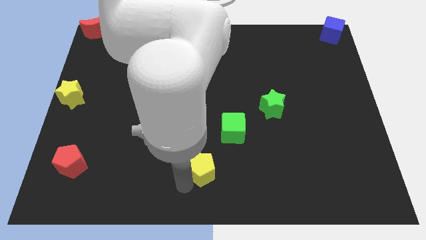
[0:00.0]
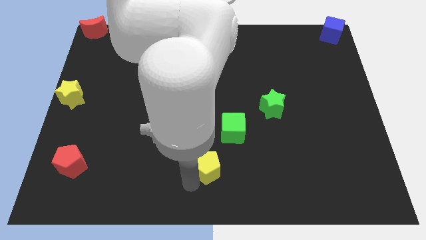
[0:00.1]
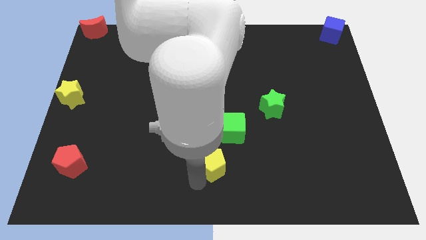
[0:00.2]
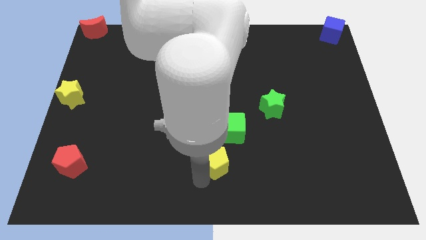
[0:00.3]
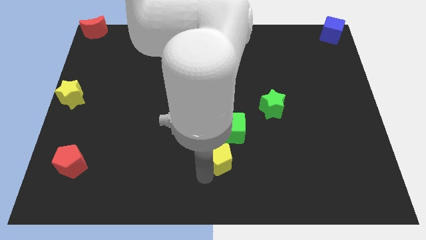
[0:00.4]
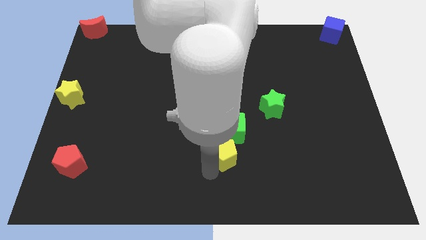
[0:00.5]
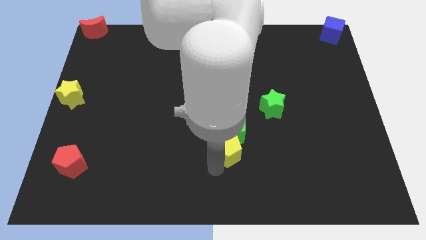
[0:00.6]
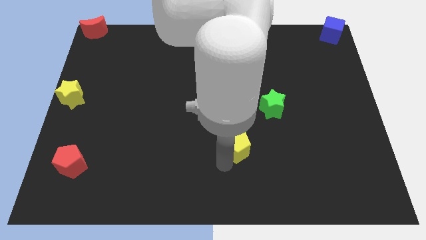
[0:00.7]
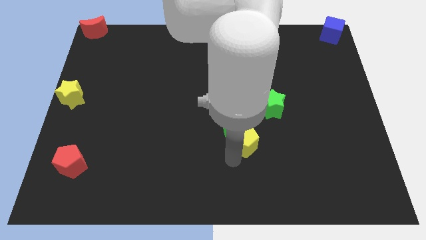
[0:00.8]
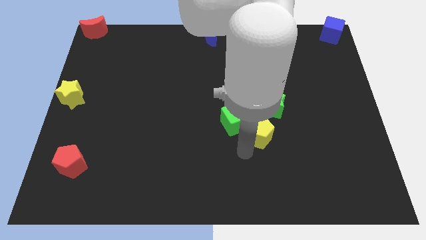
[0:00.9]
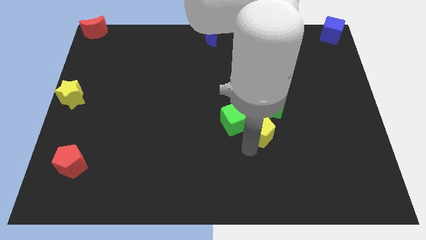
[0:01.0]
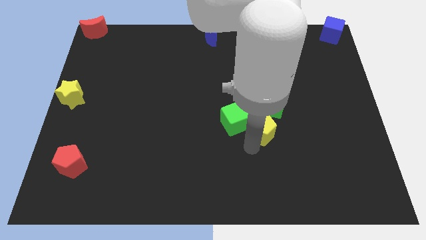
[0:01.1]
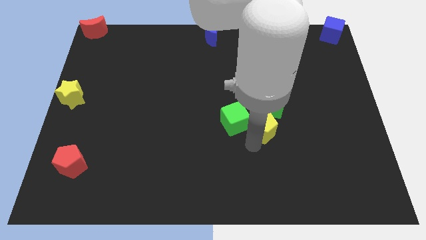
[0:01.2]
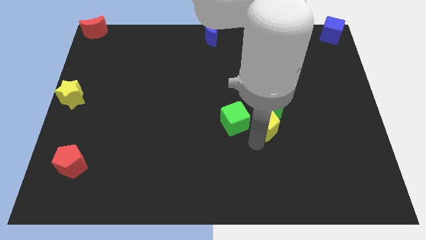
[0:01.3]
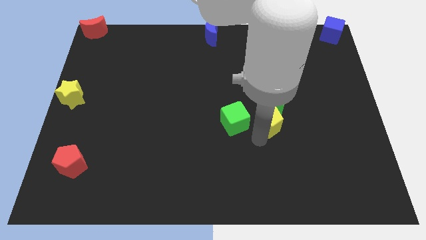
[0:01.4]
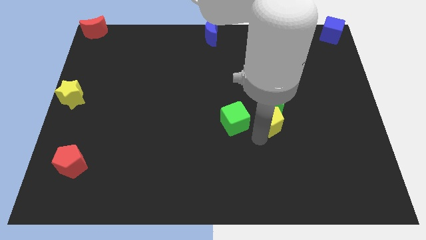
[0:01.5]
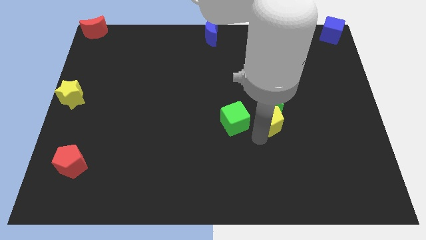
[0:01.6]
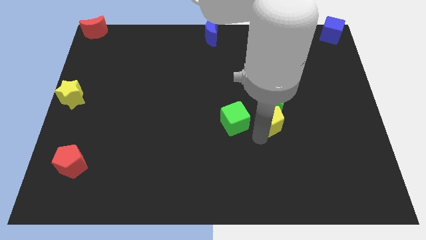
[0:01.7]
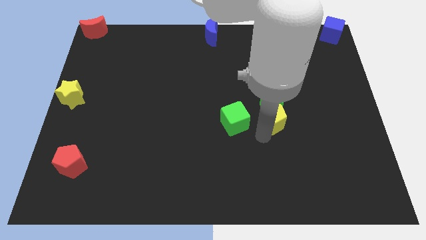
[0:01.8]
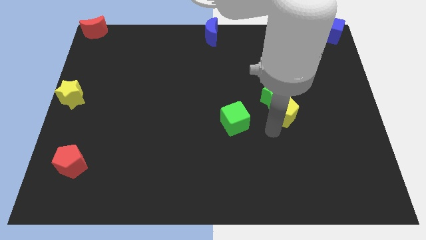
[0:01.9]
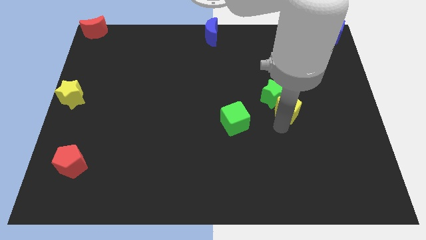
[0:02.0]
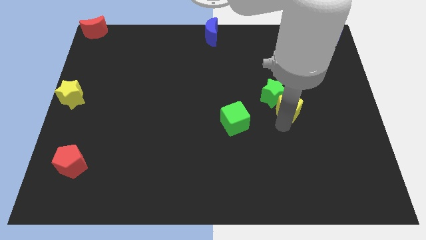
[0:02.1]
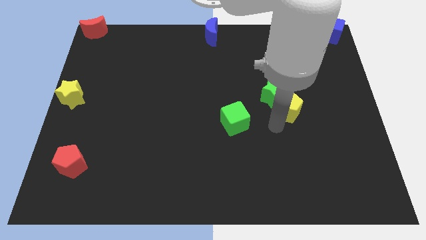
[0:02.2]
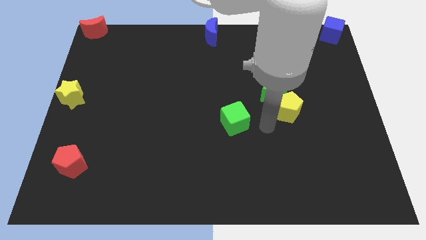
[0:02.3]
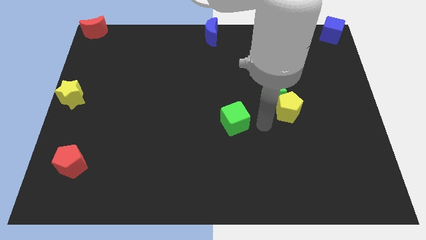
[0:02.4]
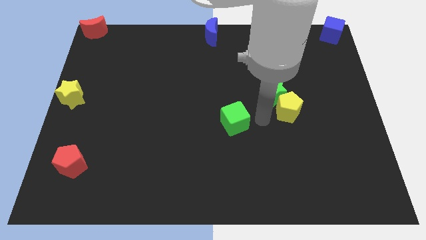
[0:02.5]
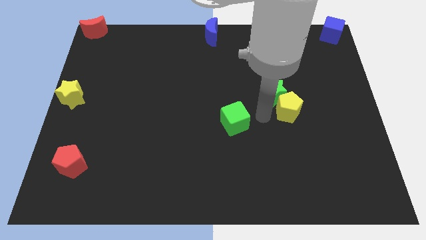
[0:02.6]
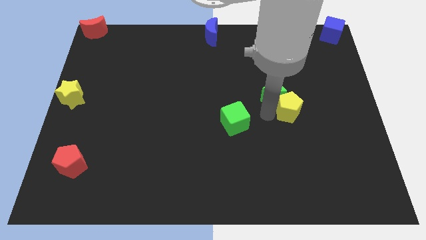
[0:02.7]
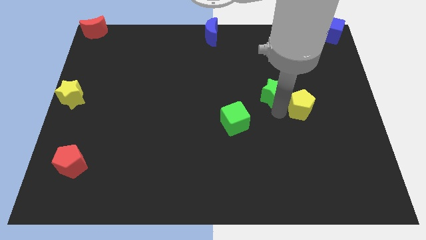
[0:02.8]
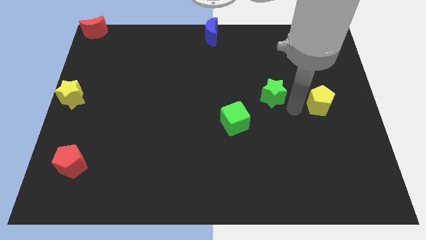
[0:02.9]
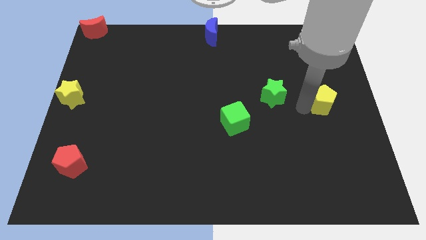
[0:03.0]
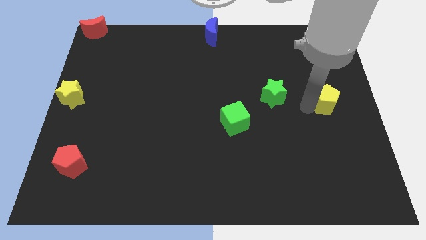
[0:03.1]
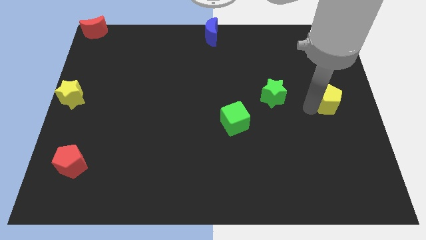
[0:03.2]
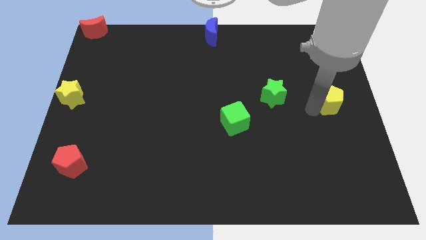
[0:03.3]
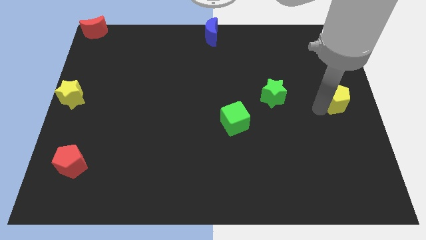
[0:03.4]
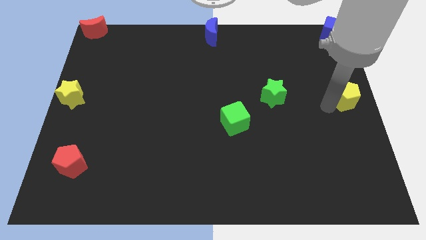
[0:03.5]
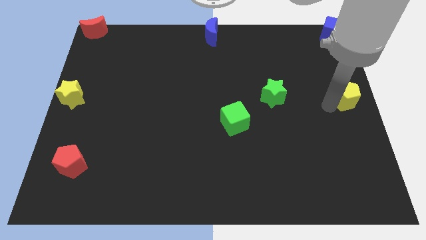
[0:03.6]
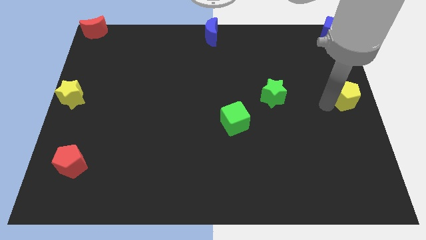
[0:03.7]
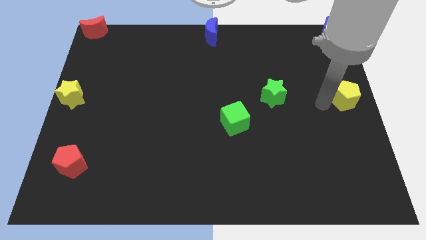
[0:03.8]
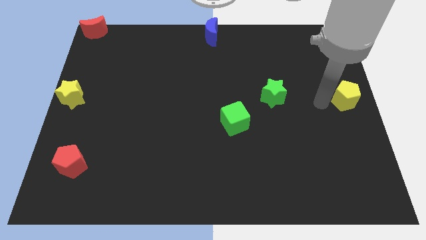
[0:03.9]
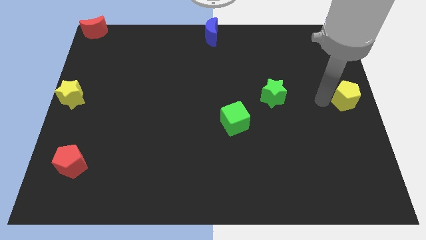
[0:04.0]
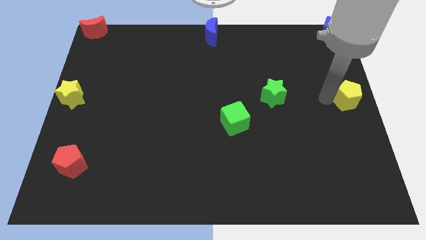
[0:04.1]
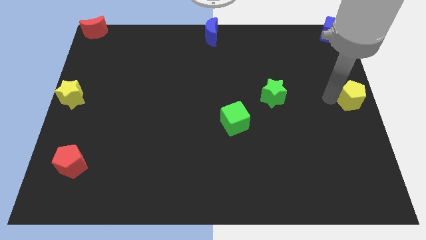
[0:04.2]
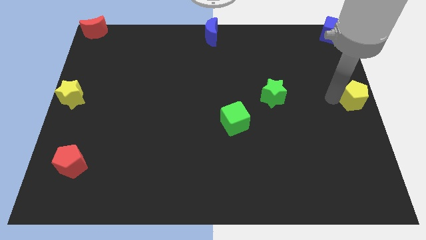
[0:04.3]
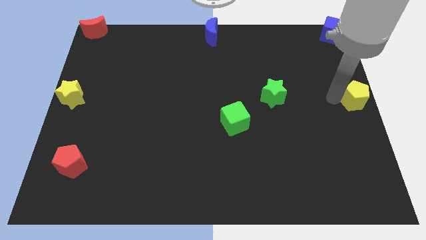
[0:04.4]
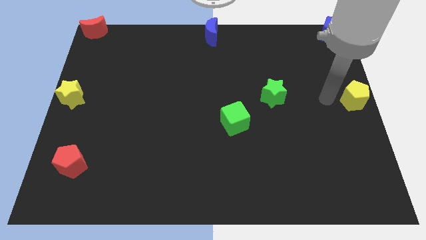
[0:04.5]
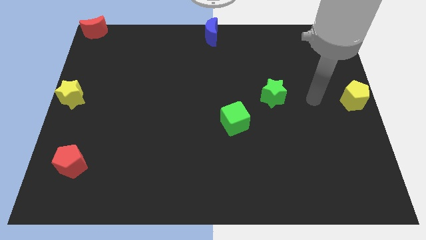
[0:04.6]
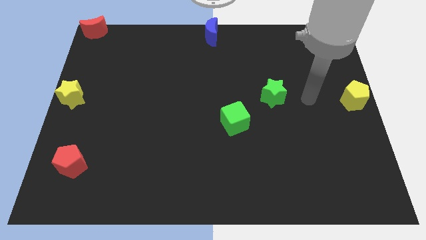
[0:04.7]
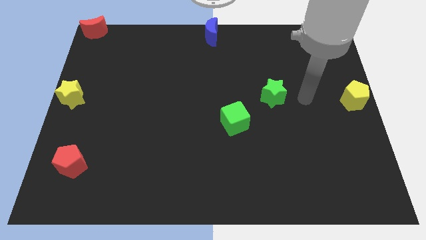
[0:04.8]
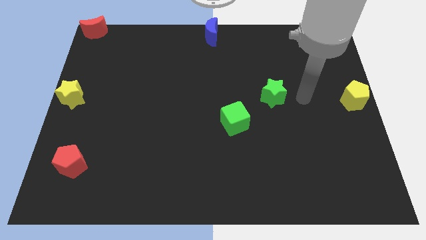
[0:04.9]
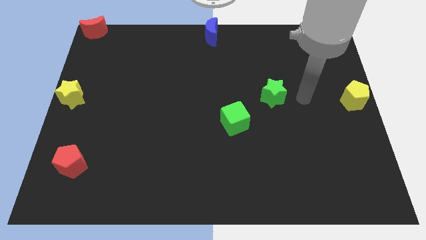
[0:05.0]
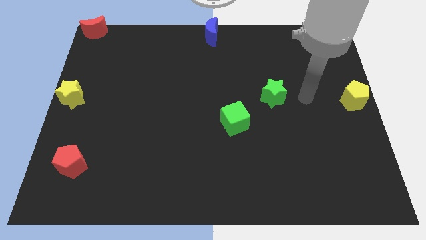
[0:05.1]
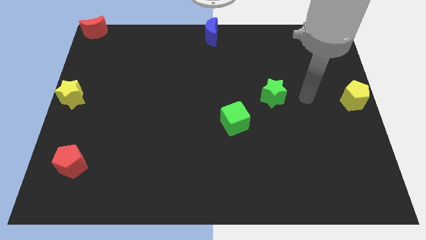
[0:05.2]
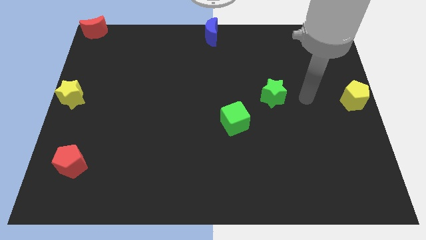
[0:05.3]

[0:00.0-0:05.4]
move yellow pentagon towards middle right side of the board

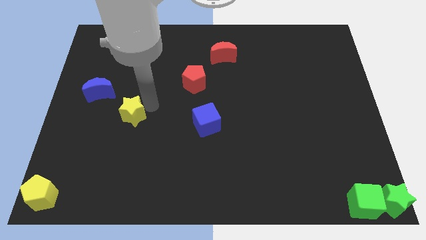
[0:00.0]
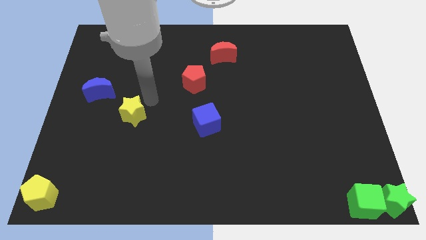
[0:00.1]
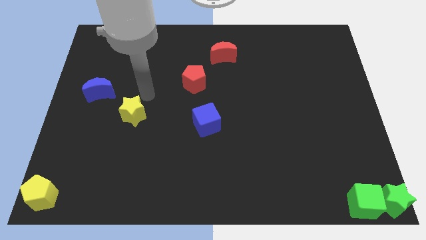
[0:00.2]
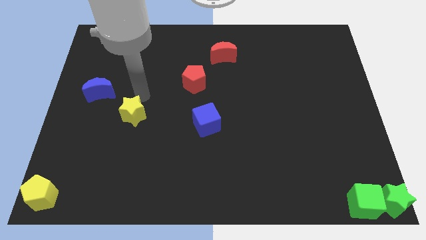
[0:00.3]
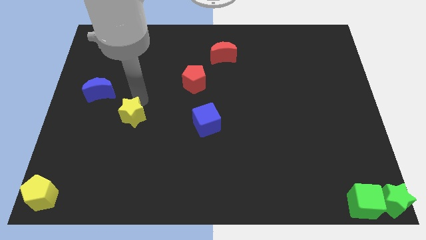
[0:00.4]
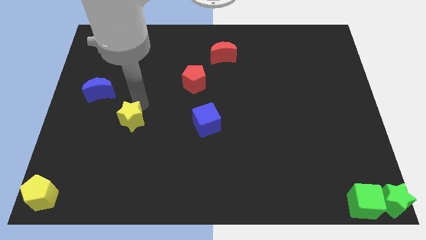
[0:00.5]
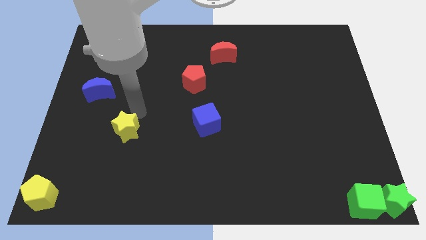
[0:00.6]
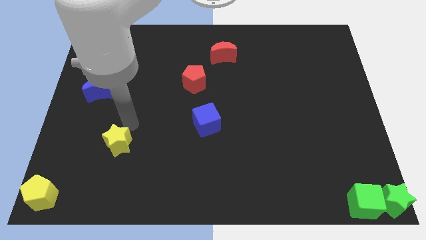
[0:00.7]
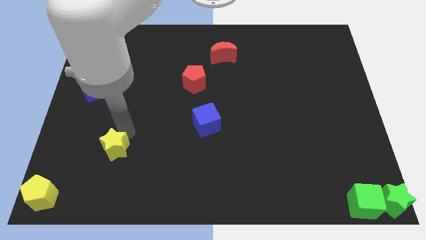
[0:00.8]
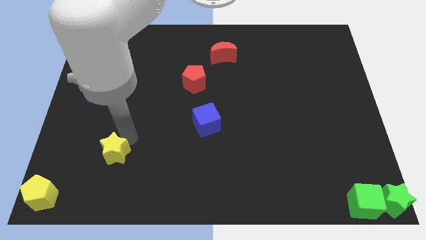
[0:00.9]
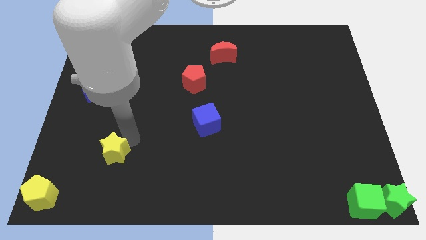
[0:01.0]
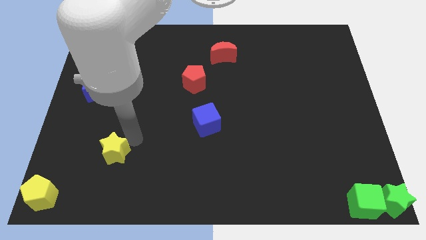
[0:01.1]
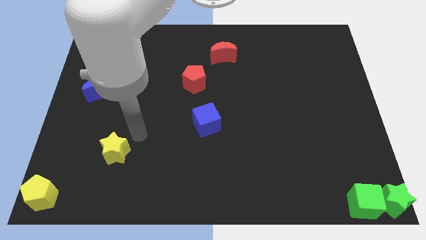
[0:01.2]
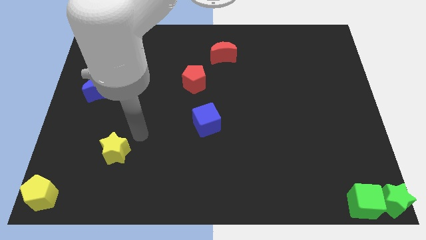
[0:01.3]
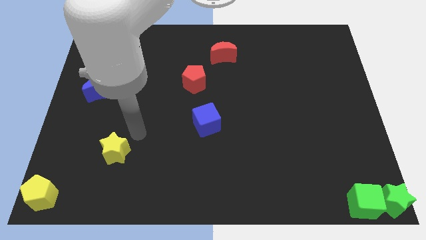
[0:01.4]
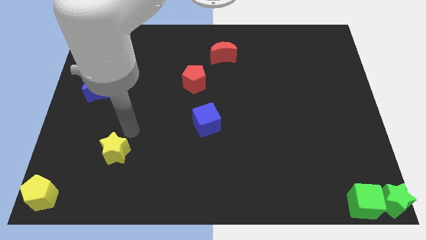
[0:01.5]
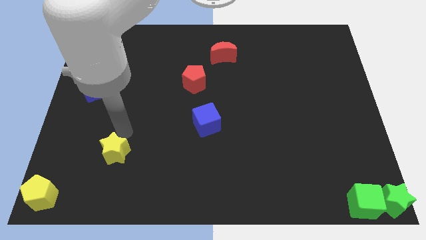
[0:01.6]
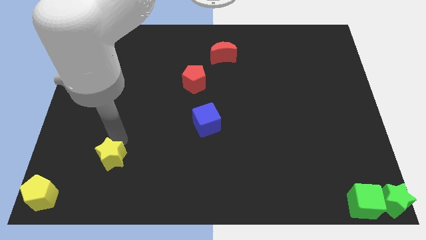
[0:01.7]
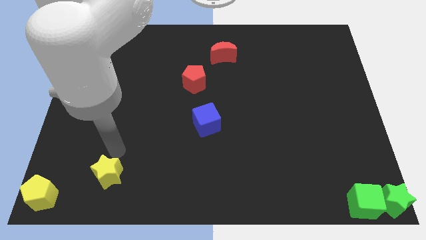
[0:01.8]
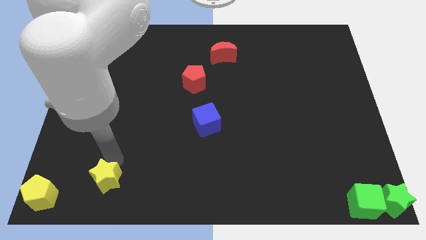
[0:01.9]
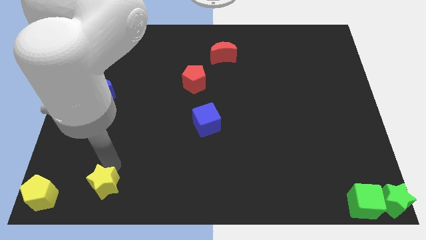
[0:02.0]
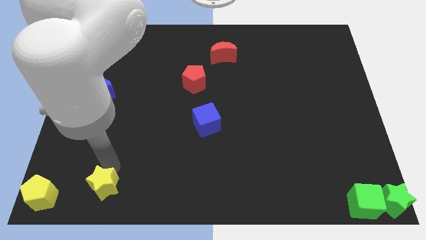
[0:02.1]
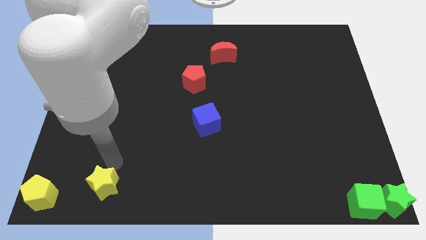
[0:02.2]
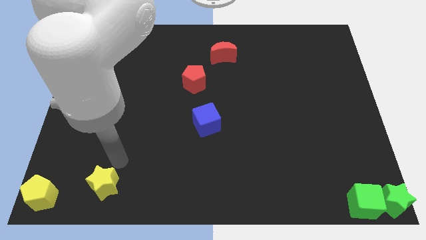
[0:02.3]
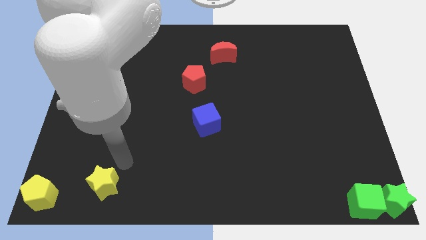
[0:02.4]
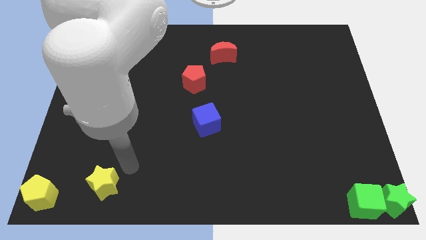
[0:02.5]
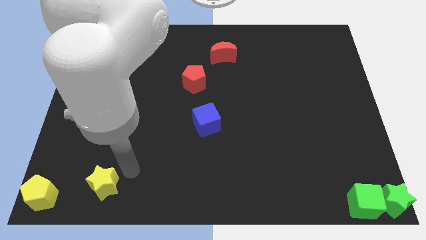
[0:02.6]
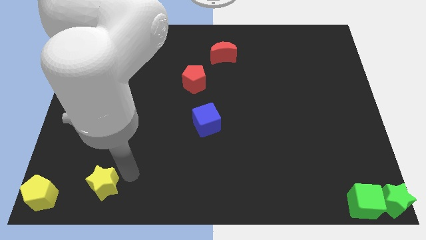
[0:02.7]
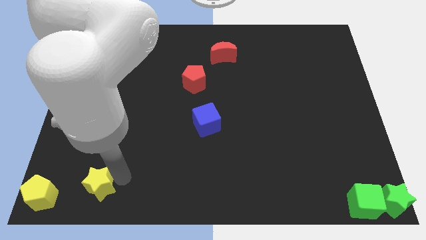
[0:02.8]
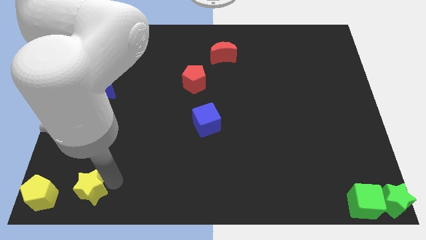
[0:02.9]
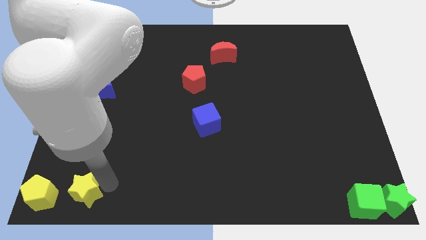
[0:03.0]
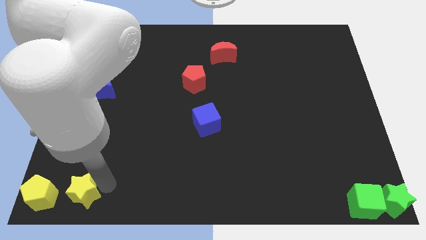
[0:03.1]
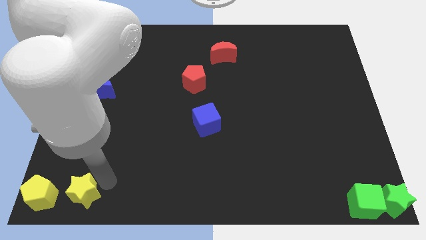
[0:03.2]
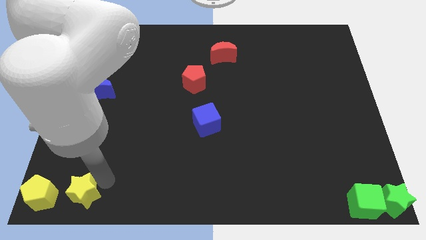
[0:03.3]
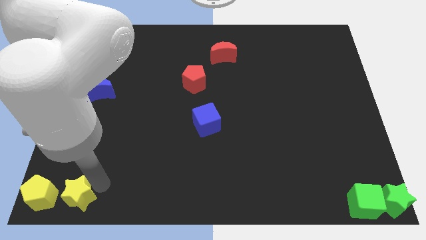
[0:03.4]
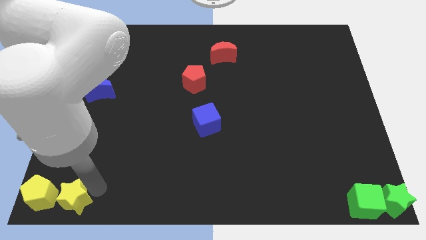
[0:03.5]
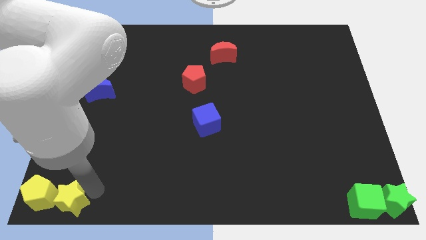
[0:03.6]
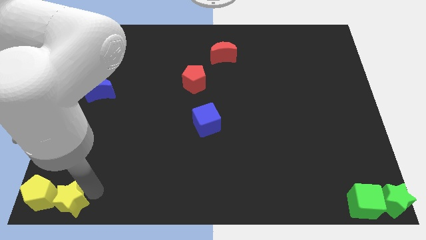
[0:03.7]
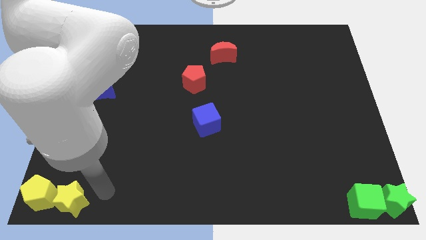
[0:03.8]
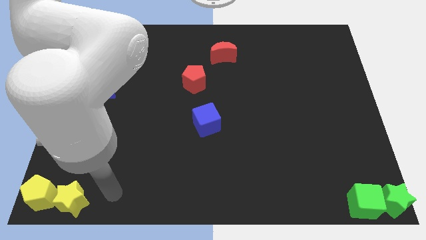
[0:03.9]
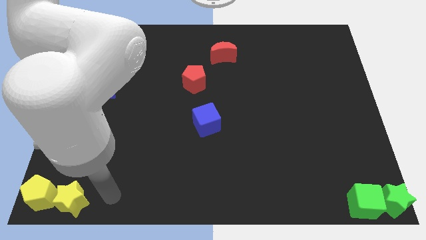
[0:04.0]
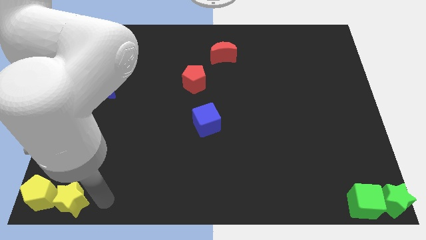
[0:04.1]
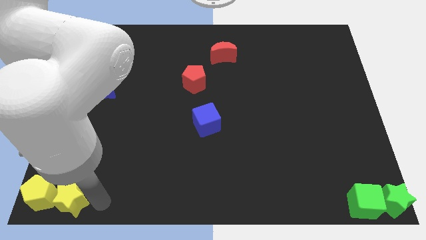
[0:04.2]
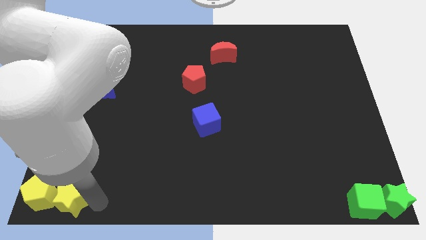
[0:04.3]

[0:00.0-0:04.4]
push the yellow star right to the yellow pentagon
